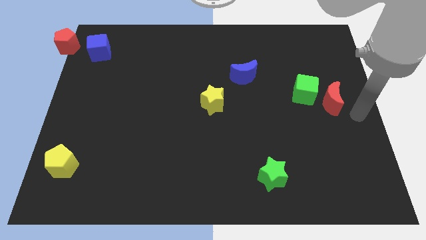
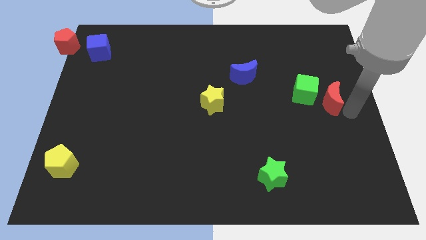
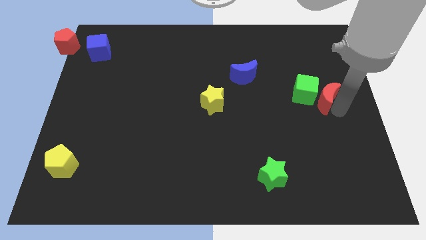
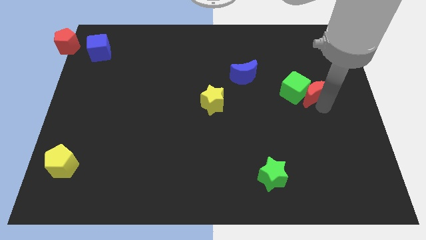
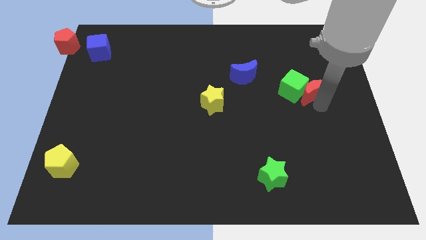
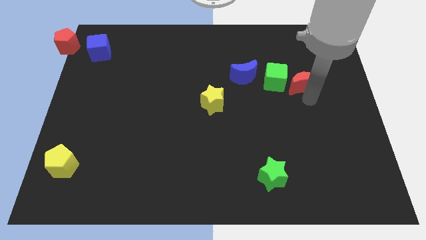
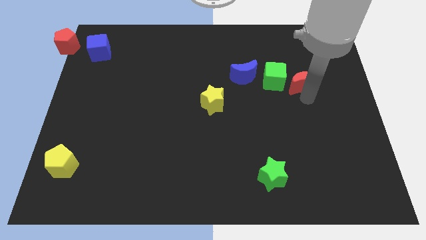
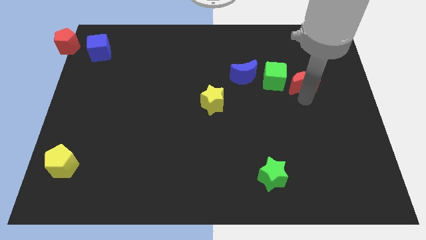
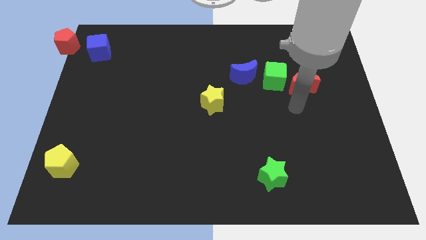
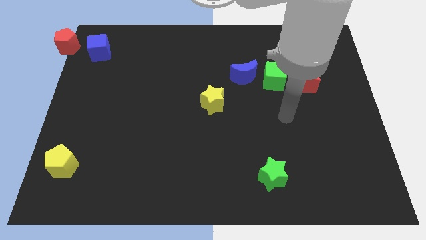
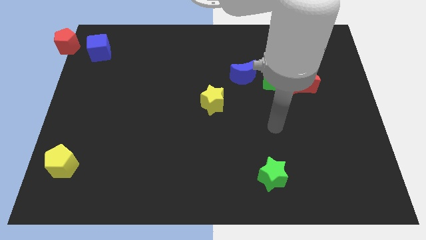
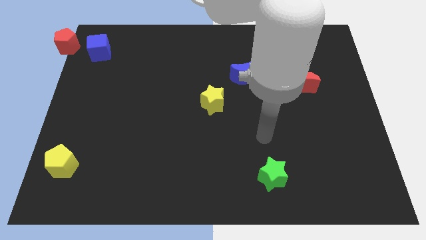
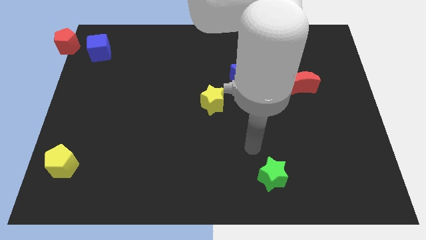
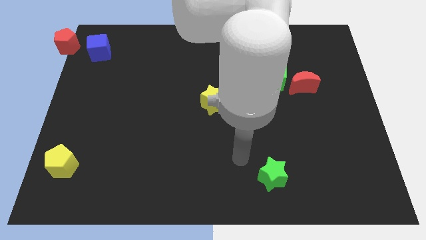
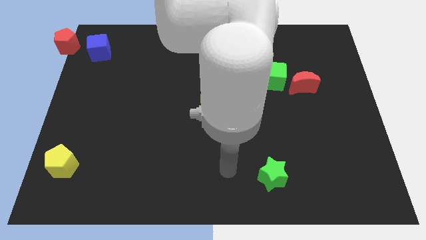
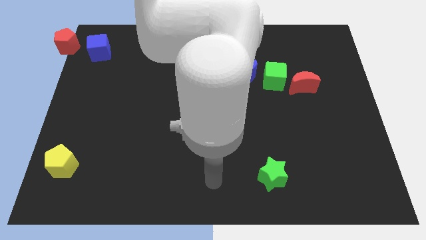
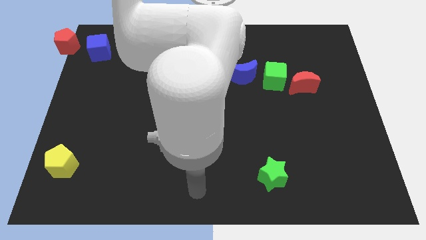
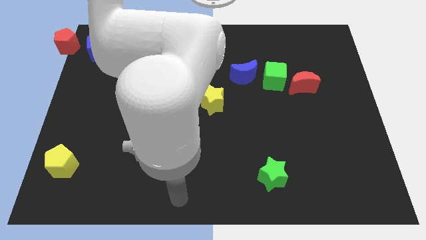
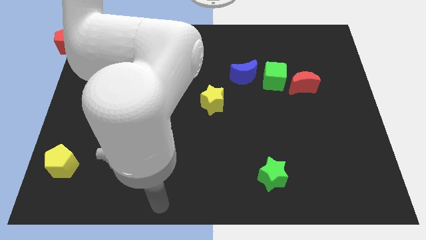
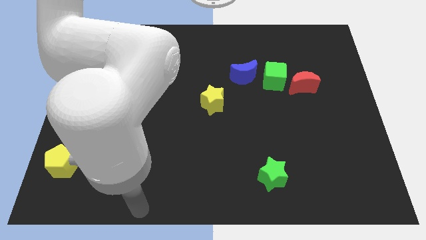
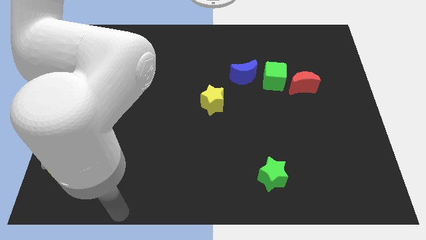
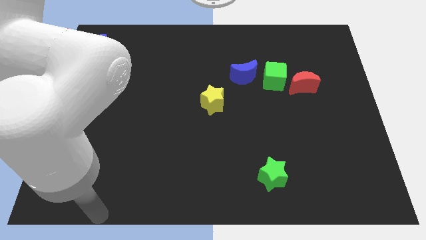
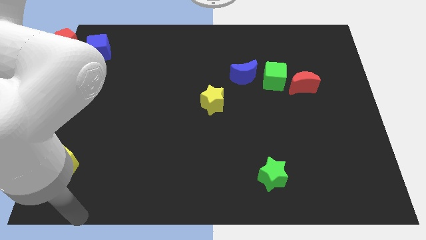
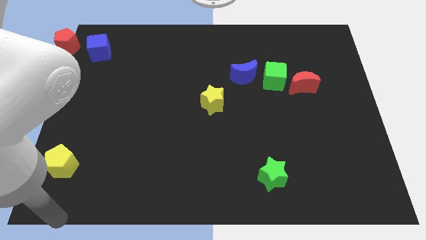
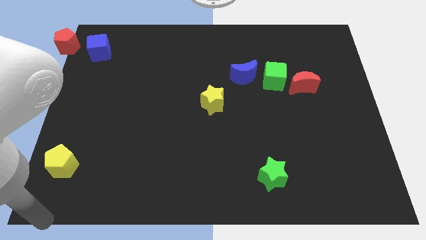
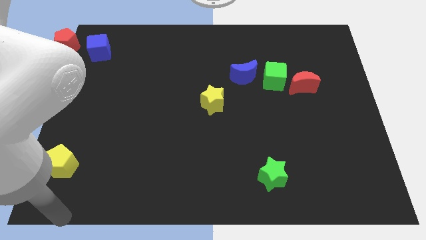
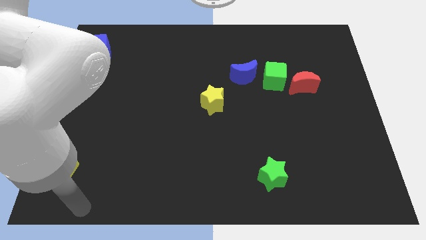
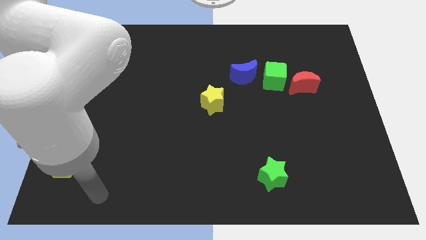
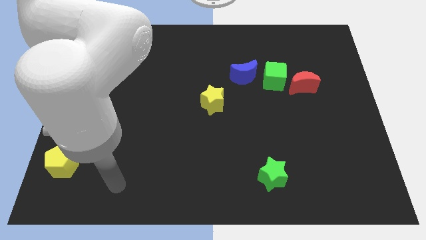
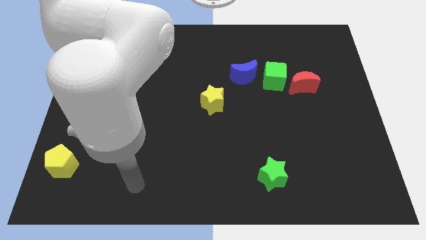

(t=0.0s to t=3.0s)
move the red moon to the right of green cube

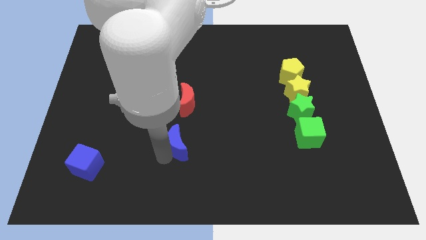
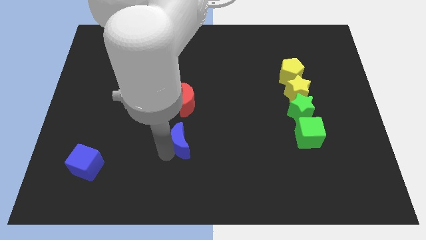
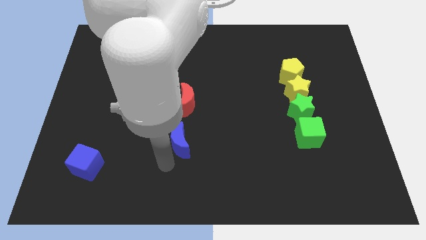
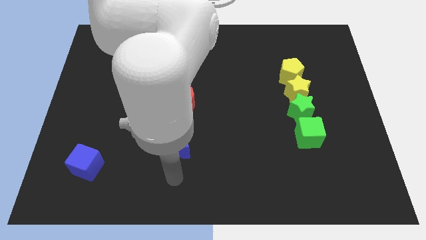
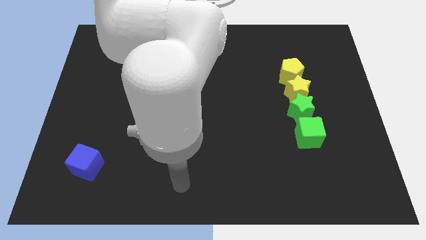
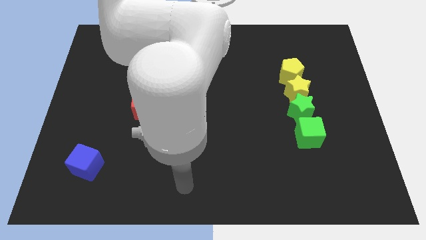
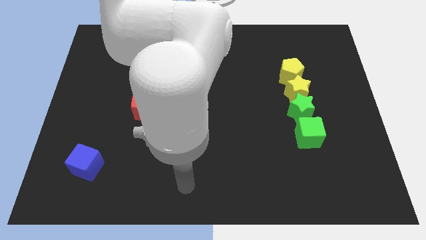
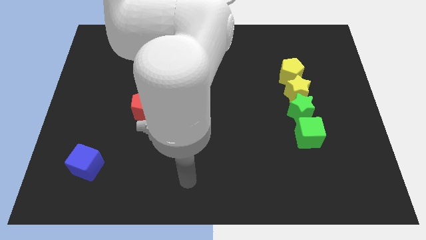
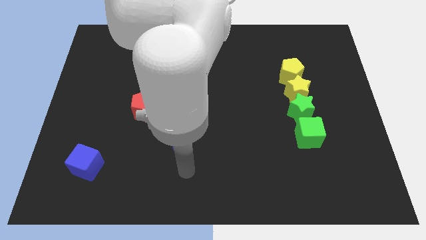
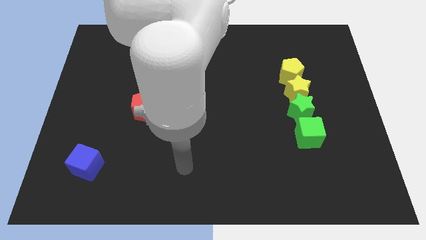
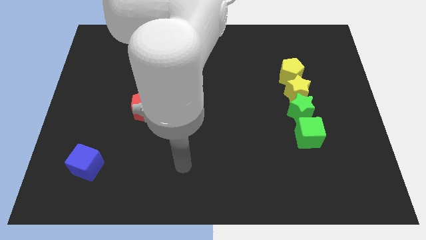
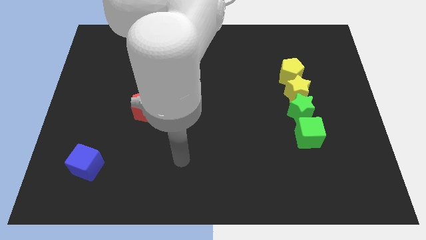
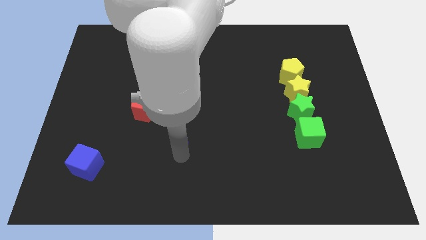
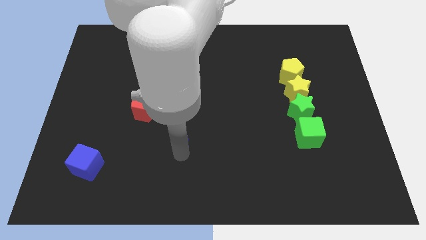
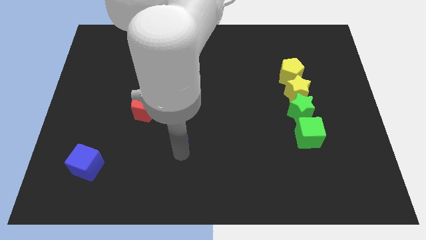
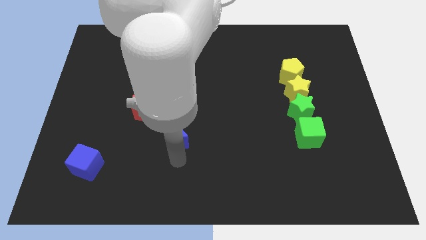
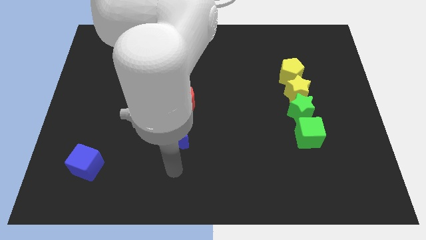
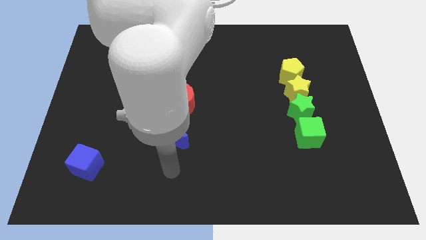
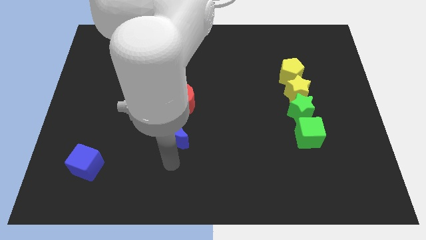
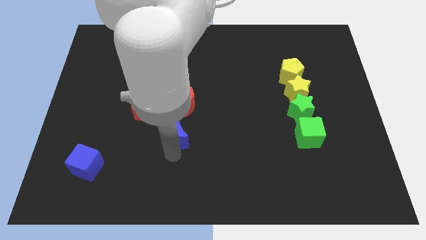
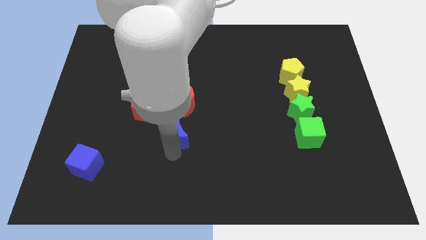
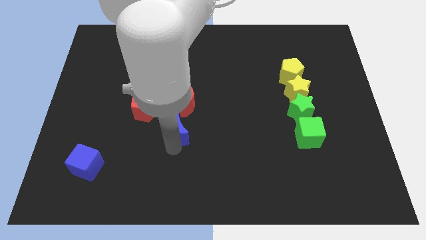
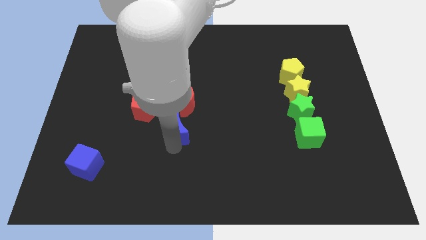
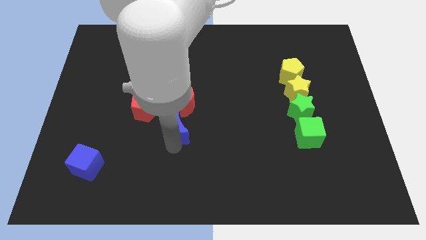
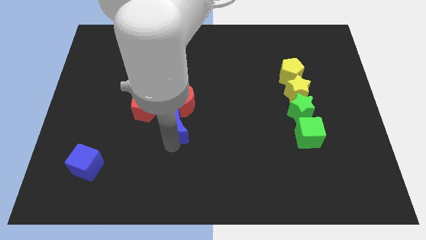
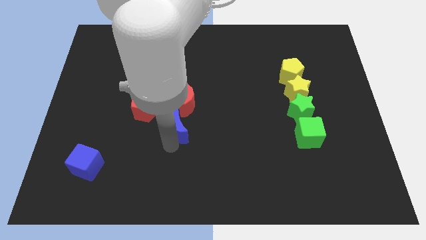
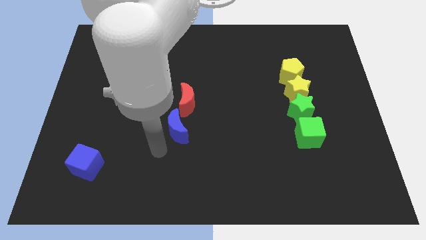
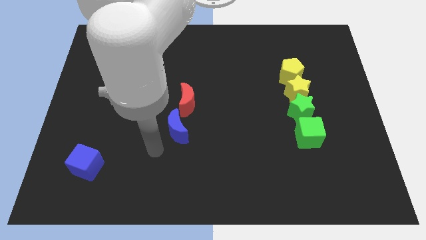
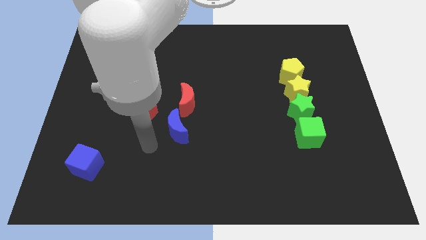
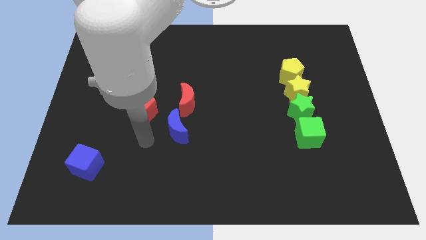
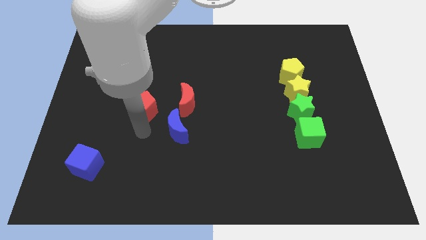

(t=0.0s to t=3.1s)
move the blue crescent close to the red moon

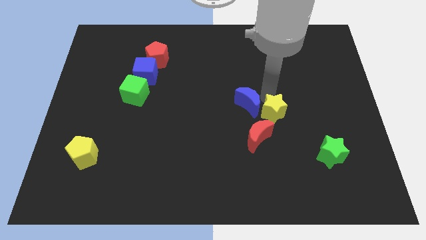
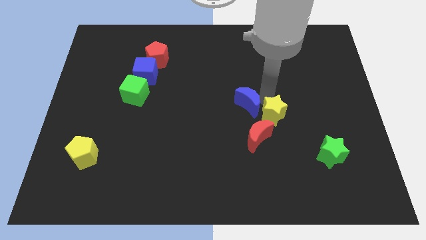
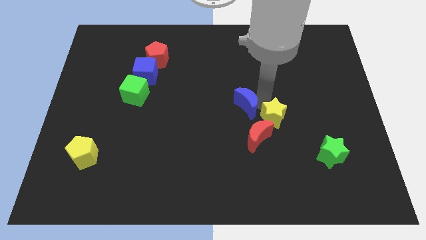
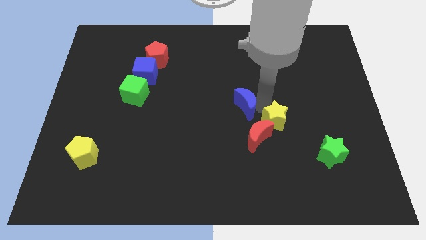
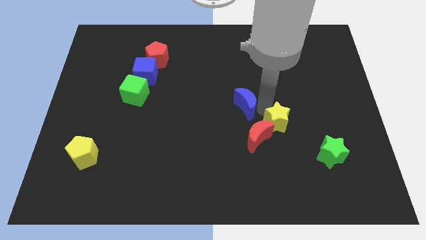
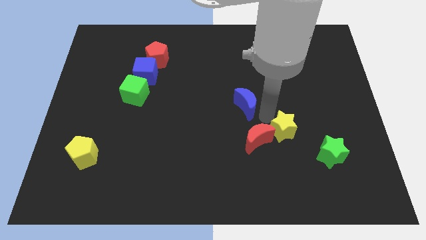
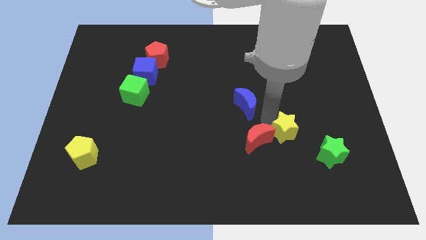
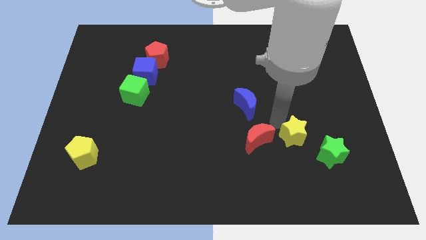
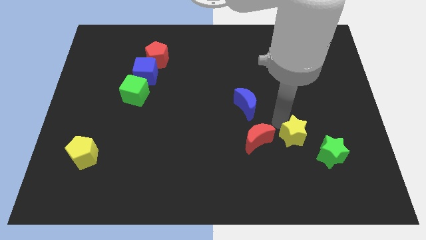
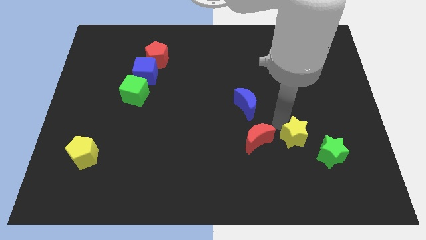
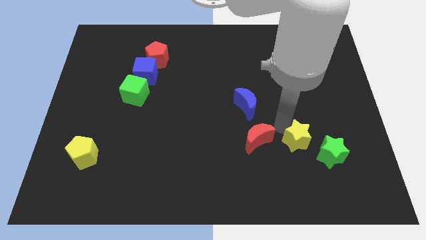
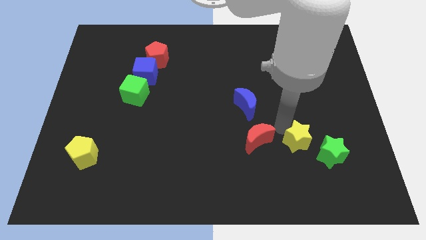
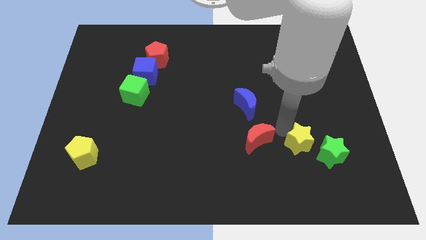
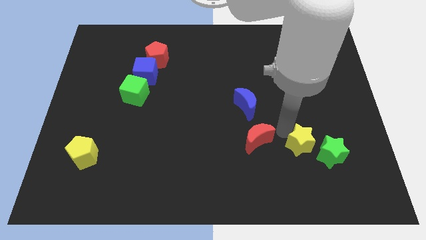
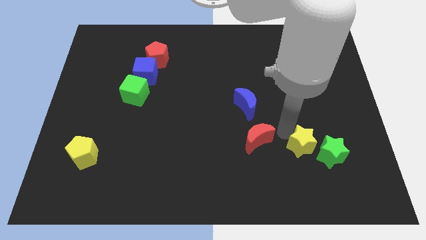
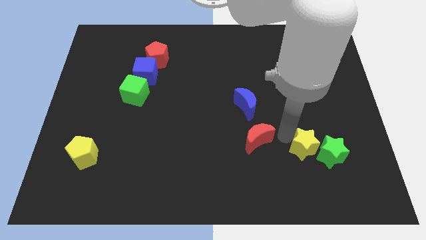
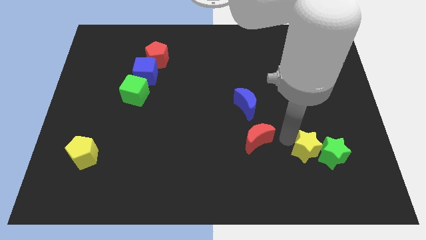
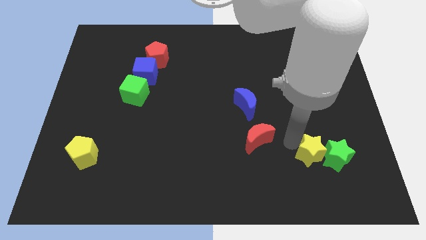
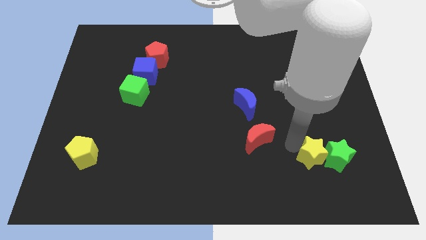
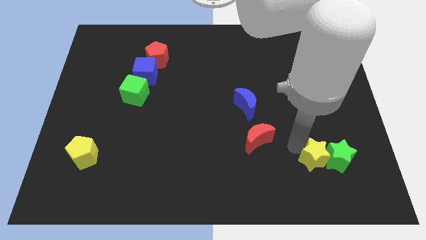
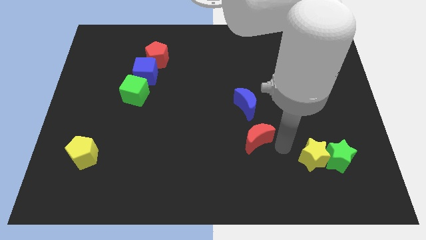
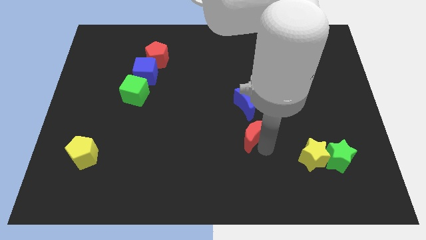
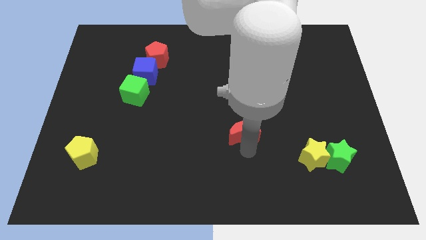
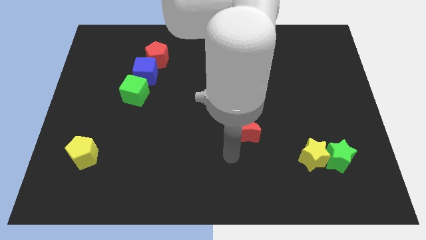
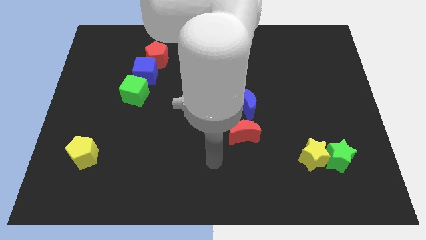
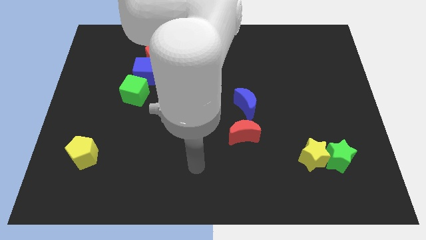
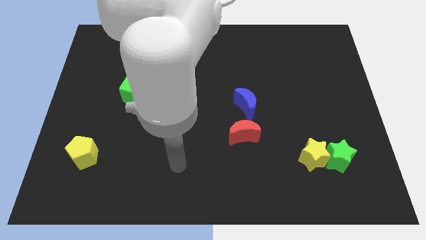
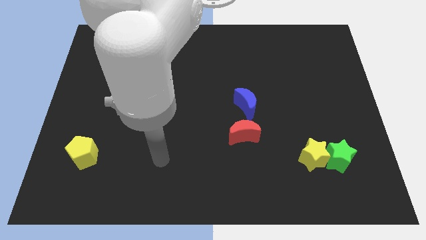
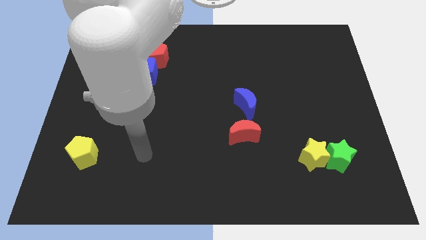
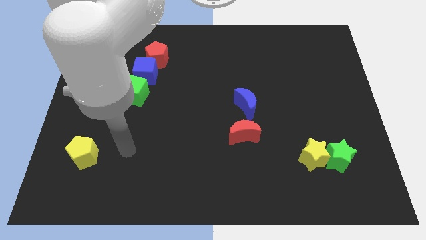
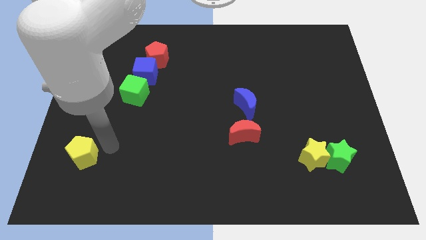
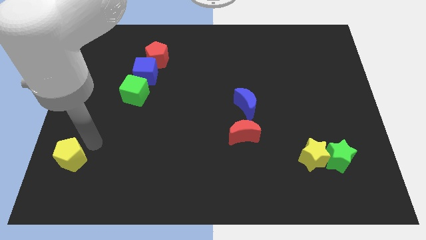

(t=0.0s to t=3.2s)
place yellow star left to green star
